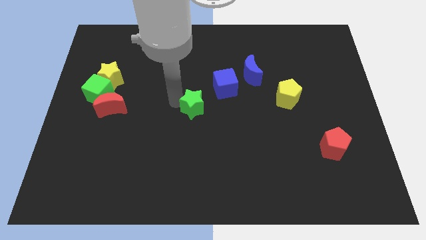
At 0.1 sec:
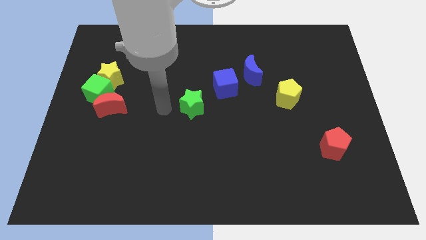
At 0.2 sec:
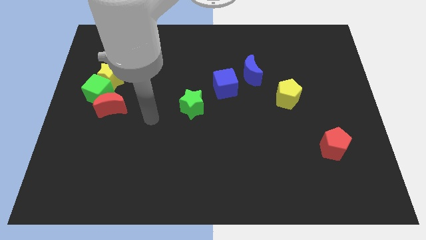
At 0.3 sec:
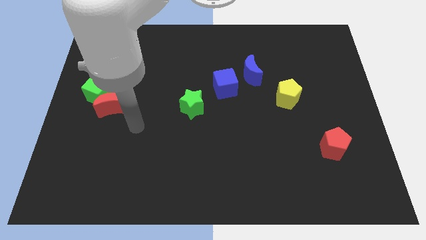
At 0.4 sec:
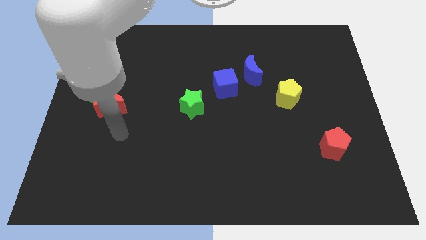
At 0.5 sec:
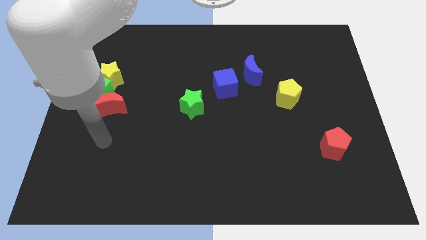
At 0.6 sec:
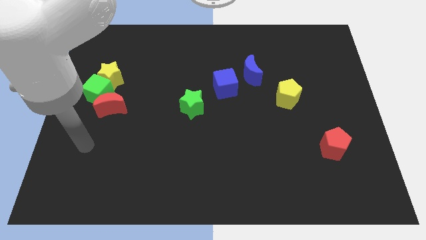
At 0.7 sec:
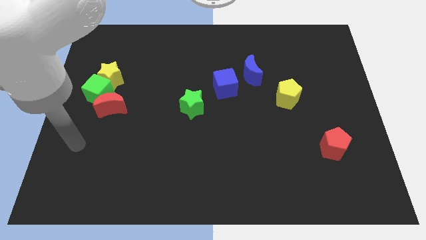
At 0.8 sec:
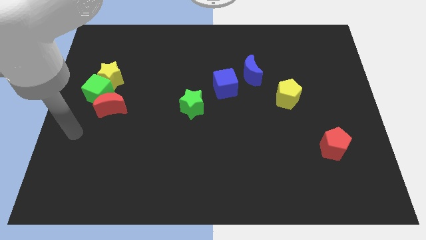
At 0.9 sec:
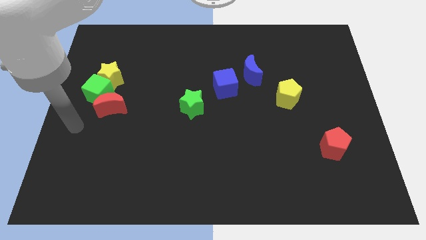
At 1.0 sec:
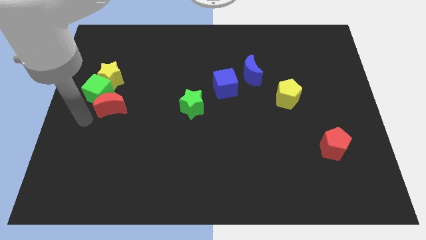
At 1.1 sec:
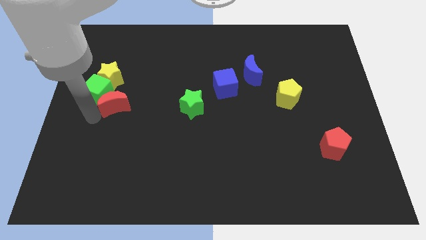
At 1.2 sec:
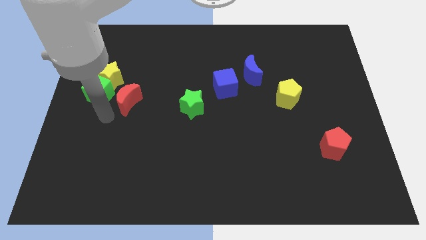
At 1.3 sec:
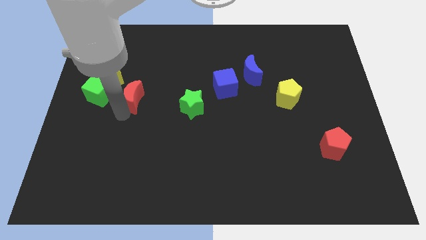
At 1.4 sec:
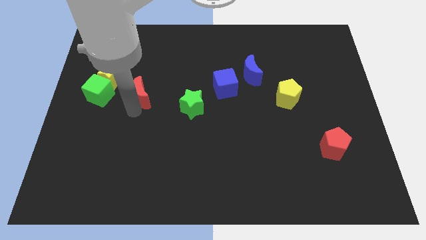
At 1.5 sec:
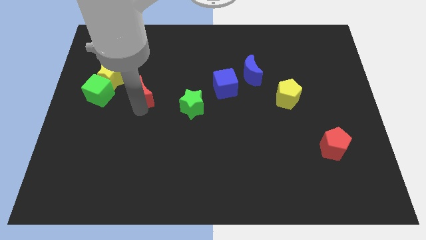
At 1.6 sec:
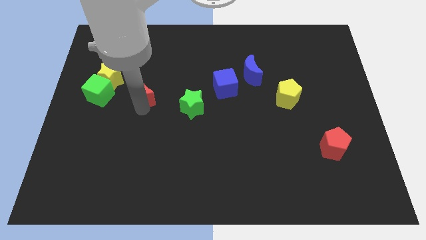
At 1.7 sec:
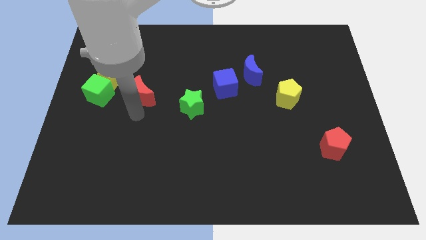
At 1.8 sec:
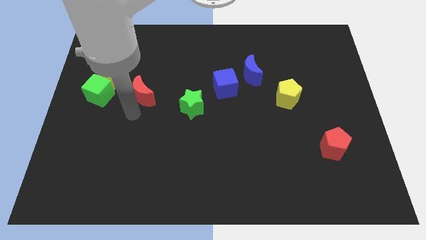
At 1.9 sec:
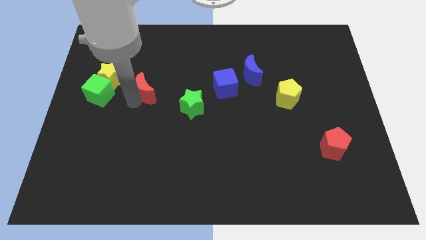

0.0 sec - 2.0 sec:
slightly move the red crescent upside of the board

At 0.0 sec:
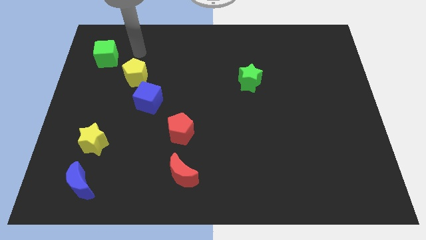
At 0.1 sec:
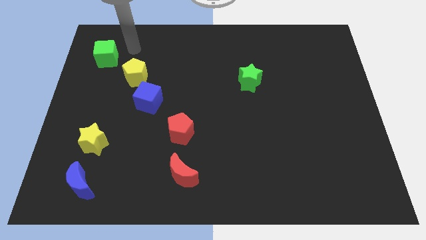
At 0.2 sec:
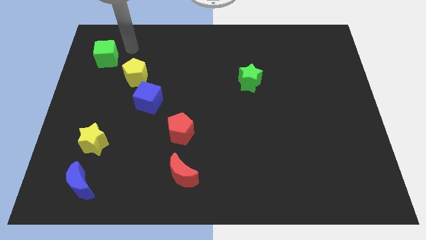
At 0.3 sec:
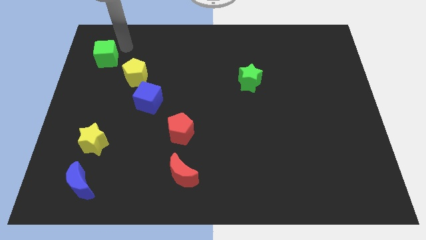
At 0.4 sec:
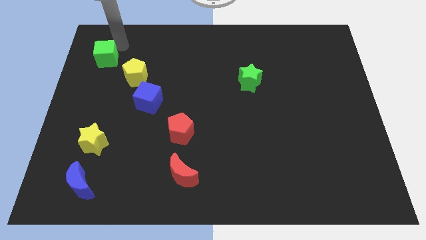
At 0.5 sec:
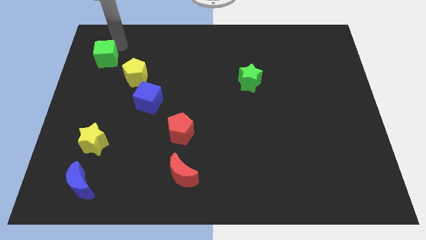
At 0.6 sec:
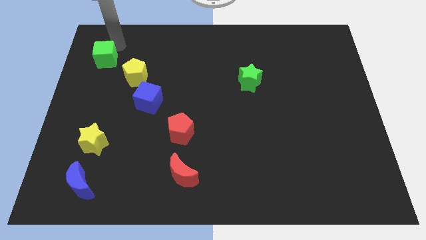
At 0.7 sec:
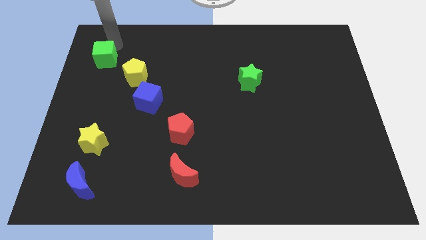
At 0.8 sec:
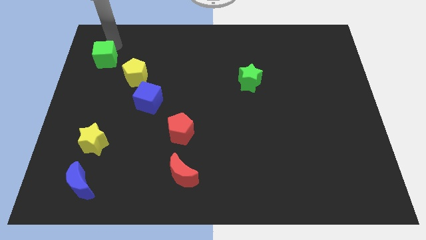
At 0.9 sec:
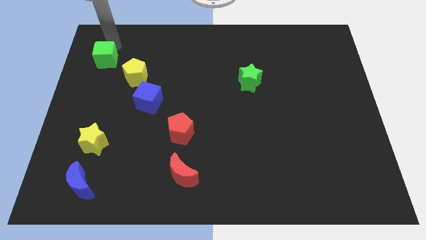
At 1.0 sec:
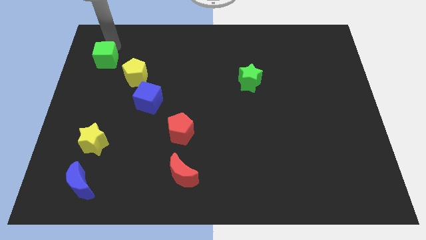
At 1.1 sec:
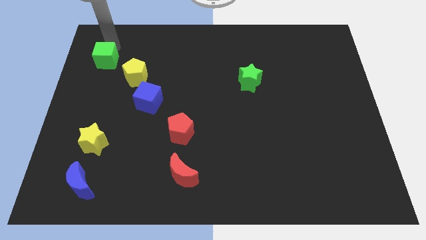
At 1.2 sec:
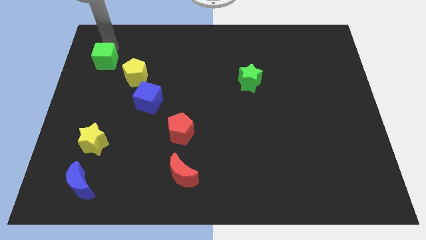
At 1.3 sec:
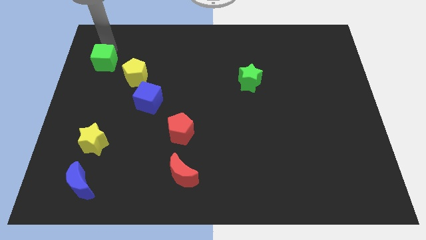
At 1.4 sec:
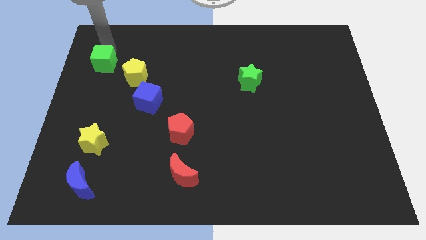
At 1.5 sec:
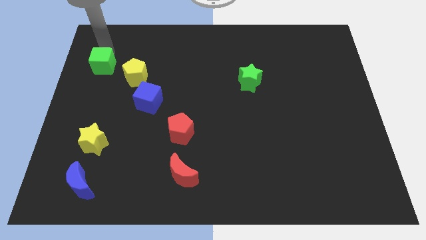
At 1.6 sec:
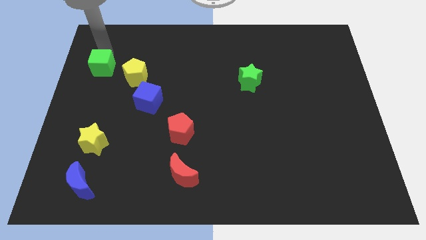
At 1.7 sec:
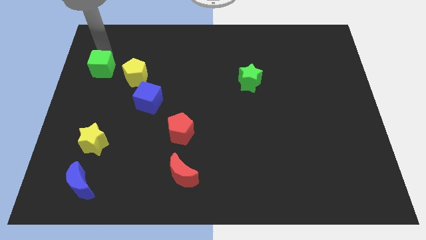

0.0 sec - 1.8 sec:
drag the green cube downward

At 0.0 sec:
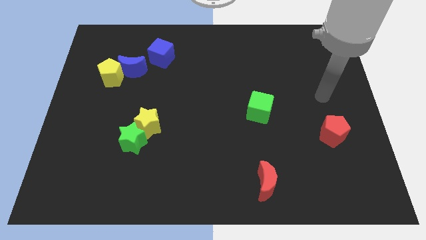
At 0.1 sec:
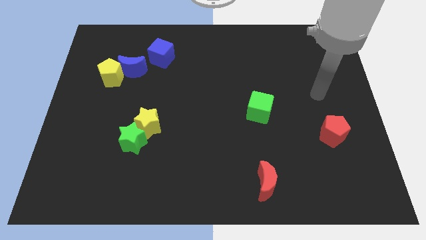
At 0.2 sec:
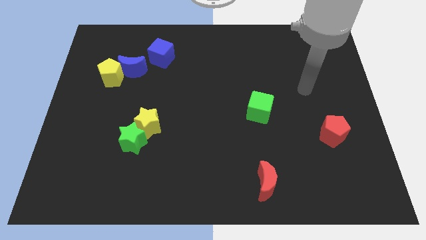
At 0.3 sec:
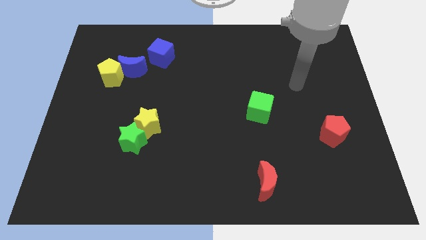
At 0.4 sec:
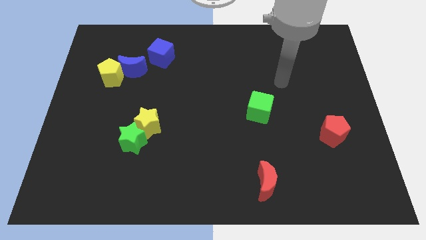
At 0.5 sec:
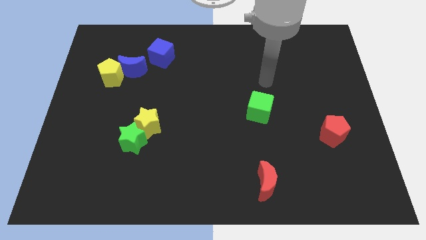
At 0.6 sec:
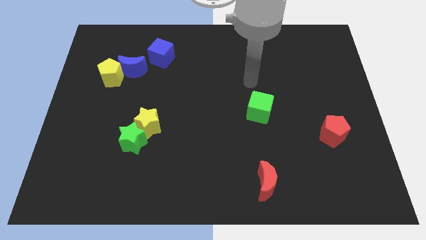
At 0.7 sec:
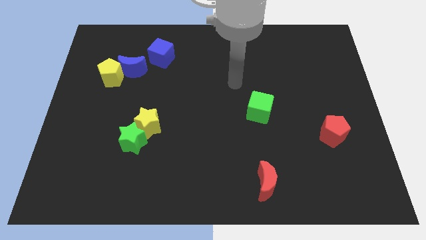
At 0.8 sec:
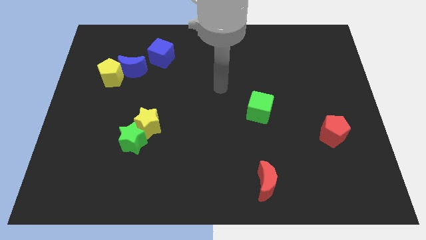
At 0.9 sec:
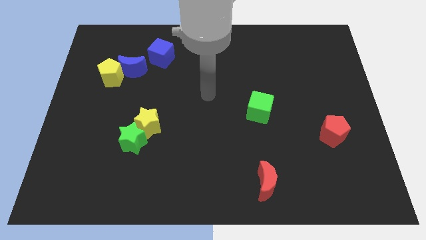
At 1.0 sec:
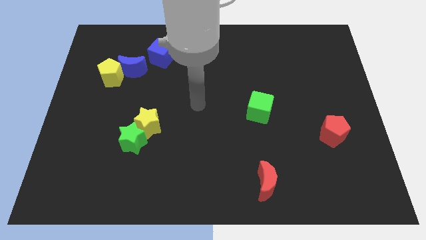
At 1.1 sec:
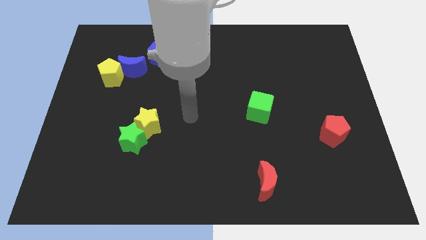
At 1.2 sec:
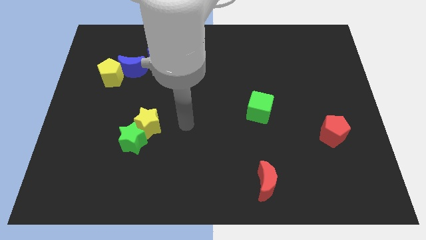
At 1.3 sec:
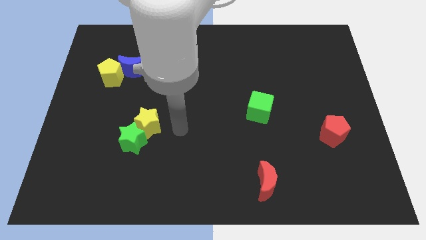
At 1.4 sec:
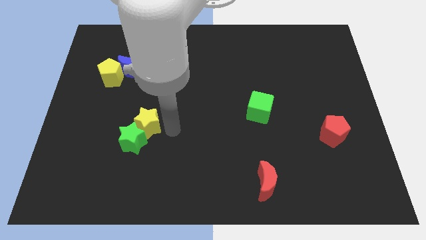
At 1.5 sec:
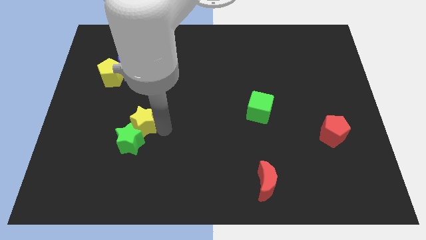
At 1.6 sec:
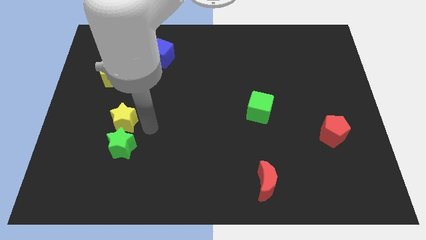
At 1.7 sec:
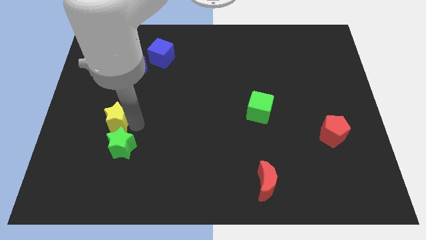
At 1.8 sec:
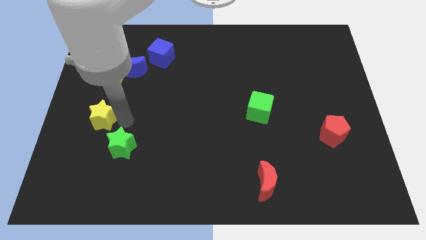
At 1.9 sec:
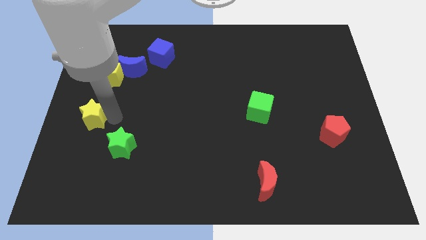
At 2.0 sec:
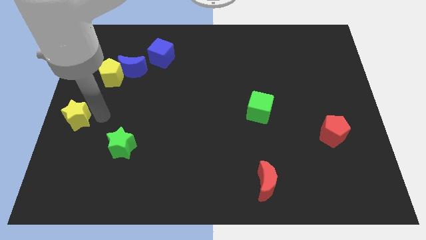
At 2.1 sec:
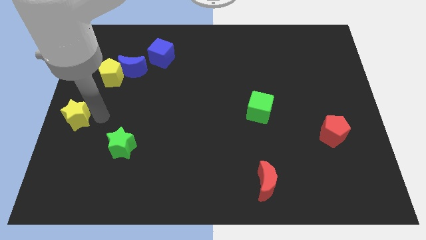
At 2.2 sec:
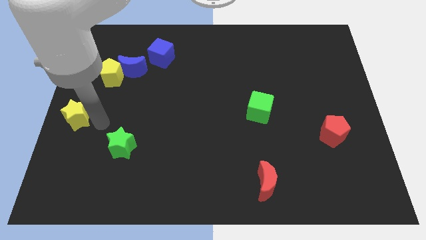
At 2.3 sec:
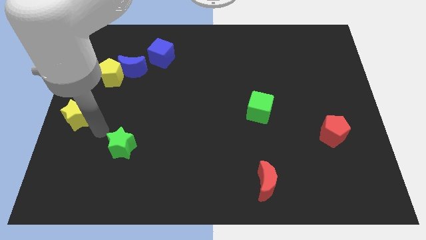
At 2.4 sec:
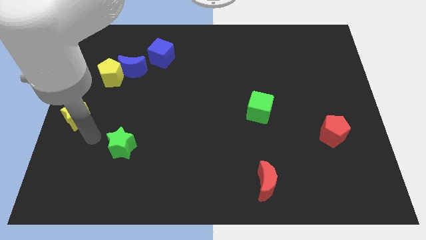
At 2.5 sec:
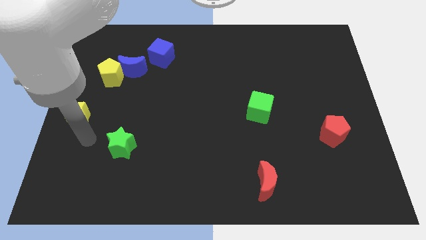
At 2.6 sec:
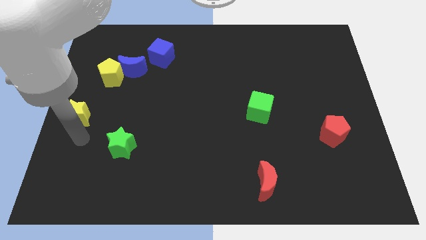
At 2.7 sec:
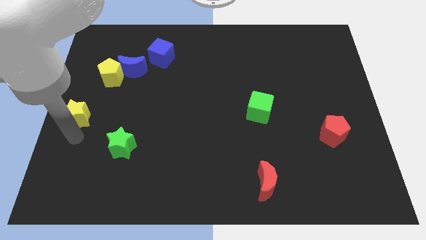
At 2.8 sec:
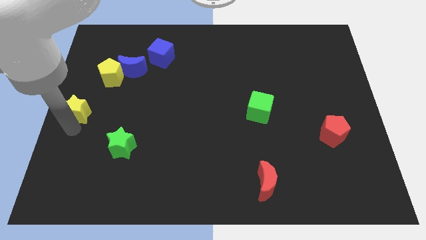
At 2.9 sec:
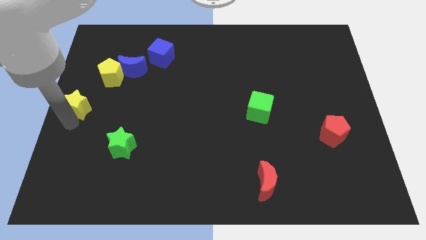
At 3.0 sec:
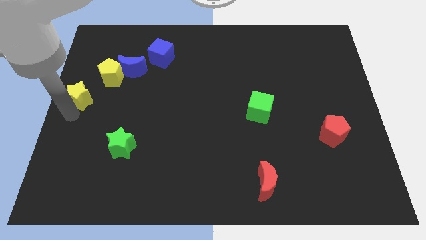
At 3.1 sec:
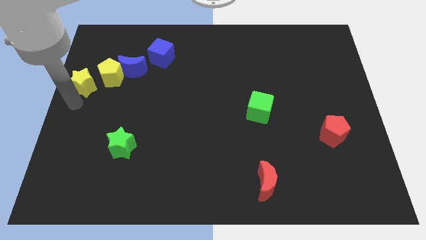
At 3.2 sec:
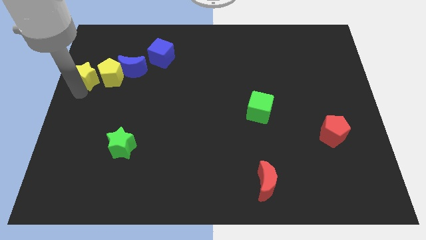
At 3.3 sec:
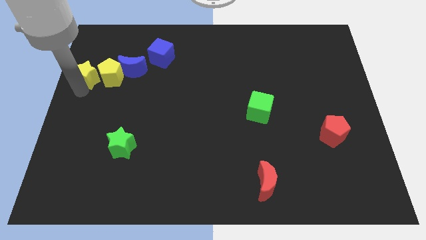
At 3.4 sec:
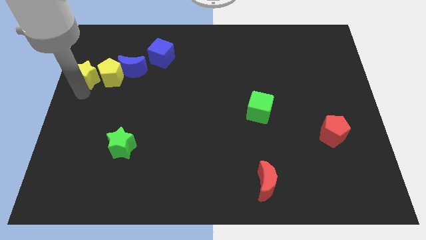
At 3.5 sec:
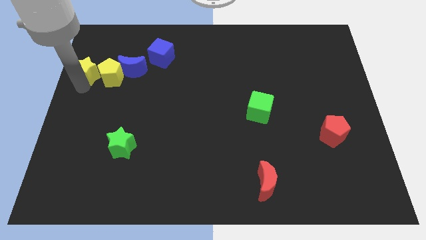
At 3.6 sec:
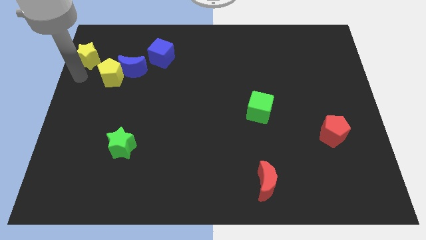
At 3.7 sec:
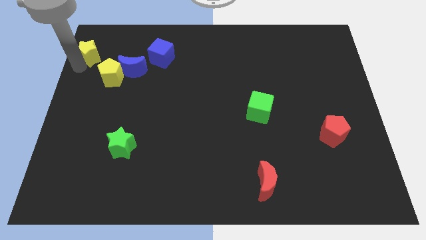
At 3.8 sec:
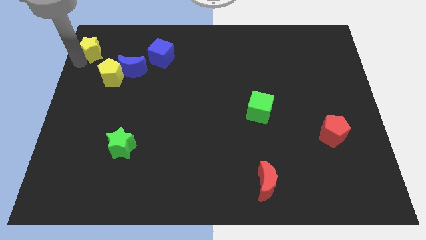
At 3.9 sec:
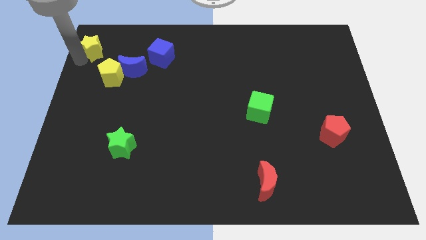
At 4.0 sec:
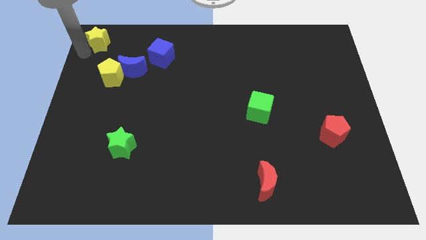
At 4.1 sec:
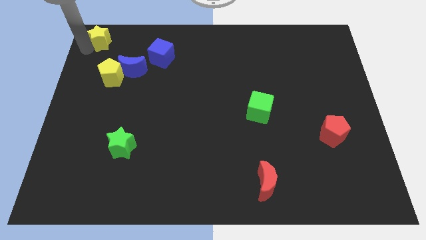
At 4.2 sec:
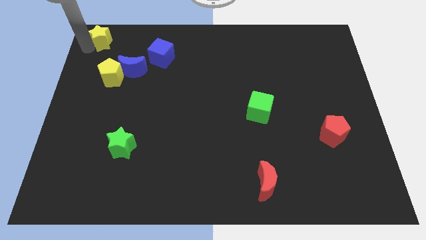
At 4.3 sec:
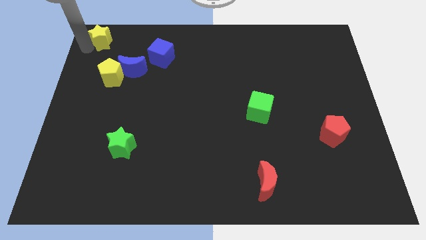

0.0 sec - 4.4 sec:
move the yellow star to the top left

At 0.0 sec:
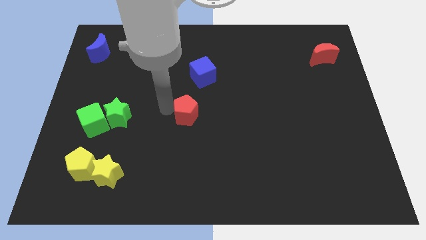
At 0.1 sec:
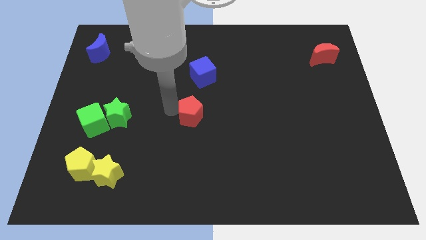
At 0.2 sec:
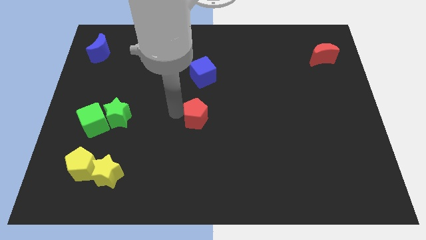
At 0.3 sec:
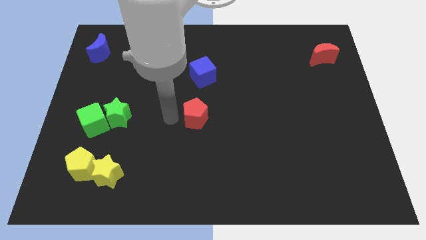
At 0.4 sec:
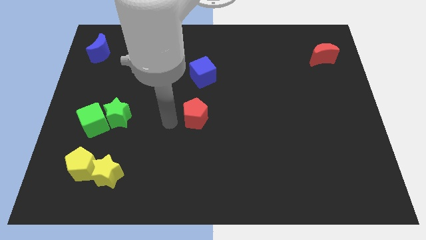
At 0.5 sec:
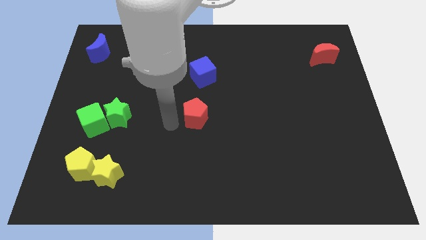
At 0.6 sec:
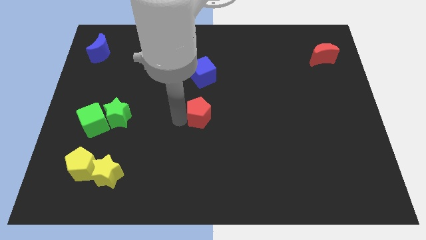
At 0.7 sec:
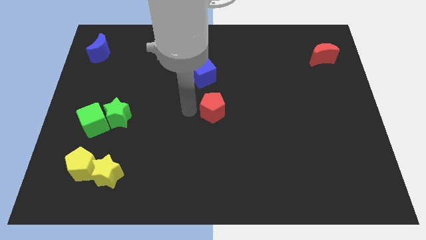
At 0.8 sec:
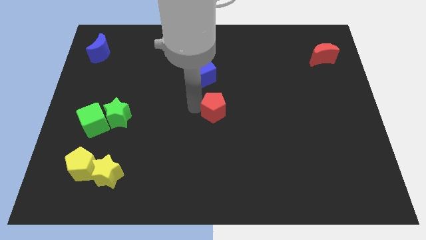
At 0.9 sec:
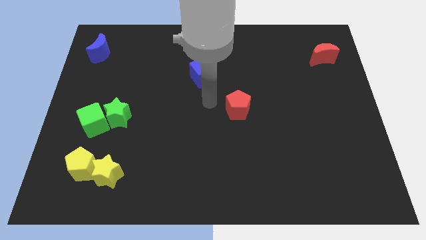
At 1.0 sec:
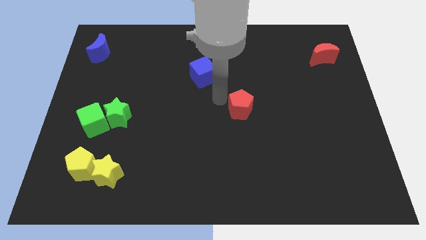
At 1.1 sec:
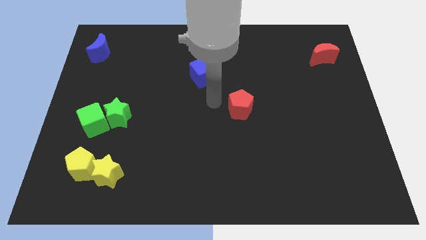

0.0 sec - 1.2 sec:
move red pentagon below blue cube
